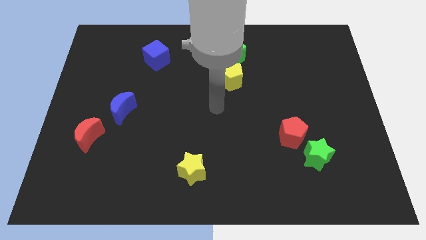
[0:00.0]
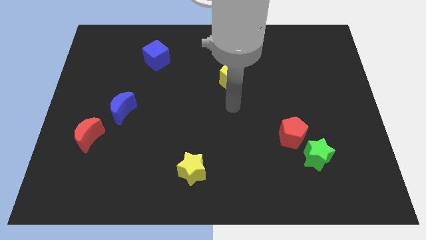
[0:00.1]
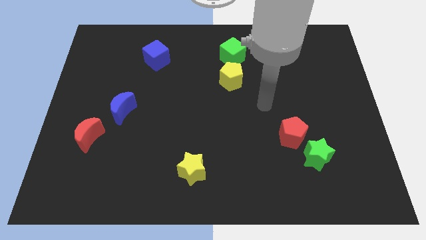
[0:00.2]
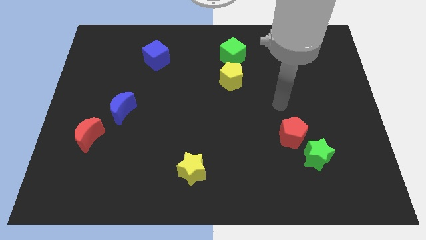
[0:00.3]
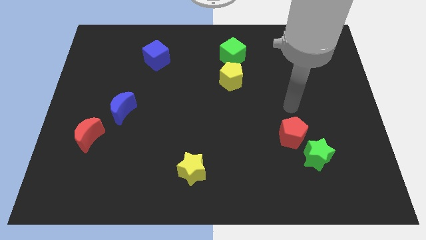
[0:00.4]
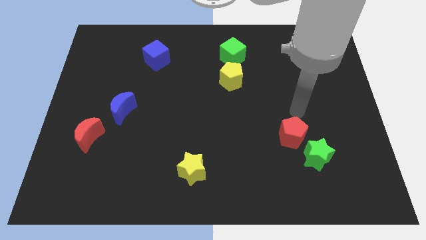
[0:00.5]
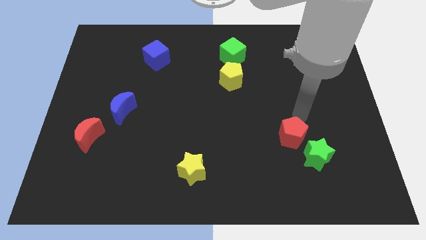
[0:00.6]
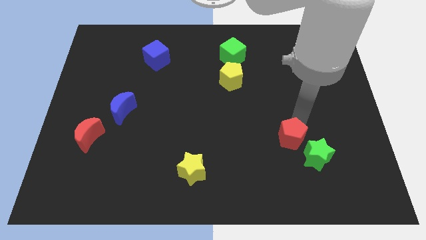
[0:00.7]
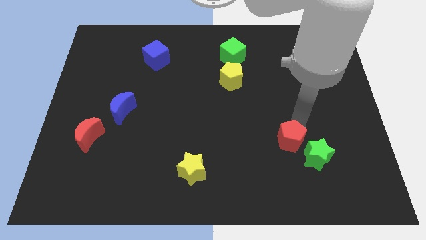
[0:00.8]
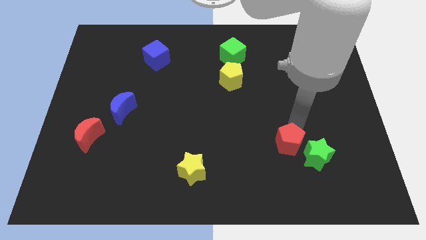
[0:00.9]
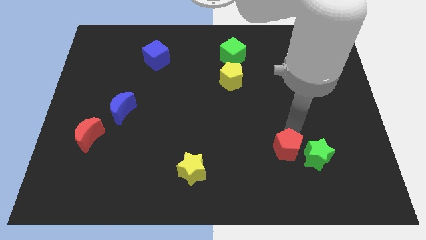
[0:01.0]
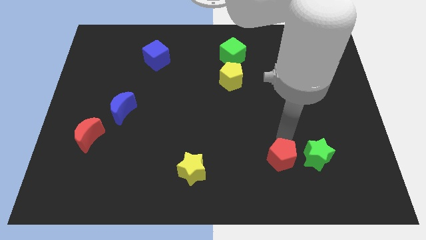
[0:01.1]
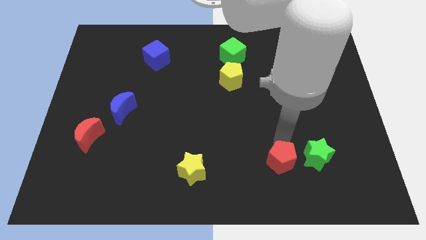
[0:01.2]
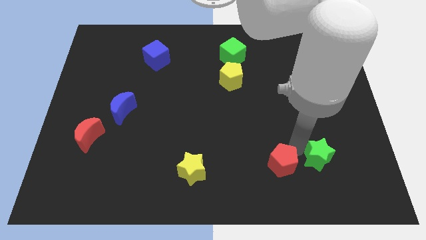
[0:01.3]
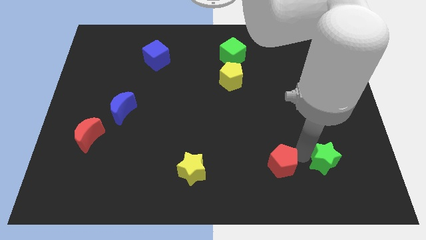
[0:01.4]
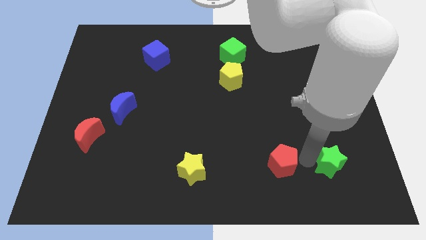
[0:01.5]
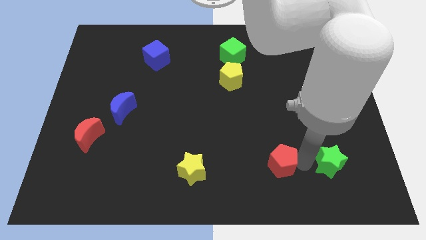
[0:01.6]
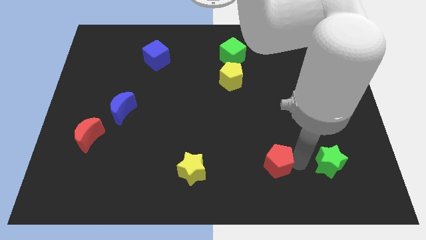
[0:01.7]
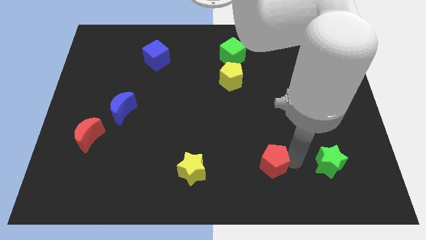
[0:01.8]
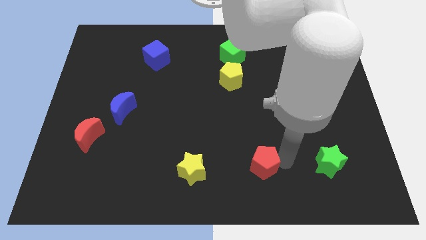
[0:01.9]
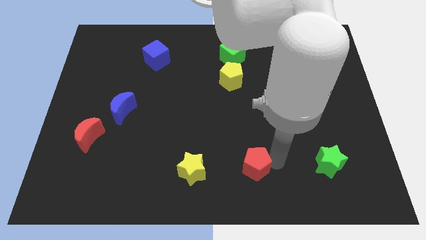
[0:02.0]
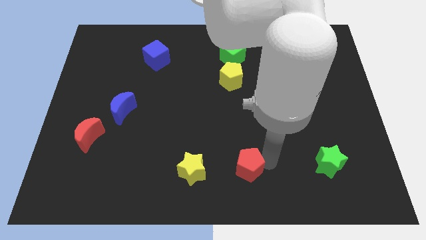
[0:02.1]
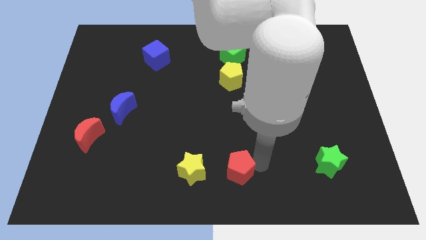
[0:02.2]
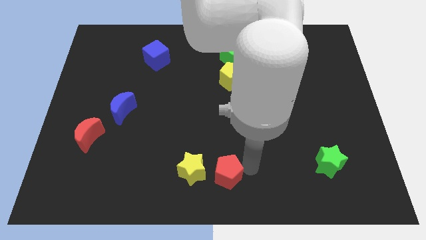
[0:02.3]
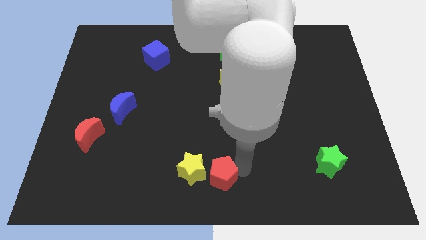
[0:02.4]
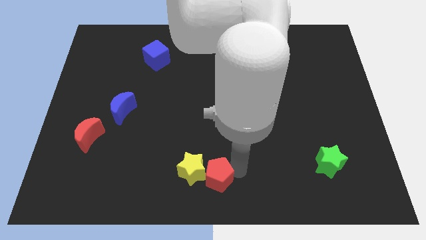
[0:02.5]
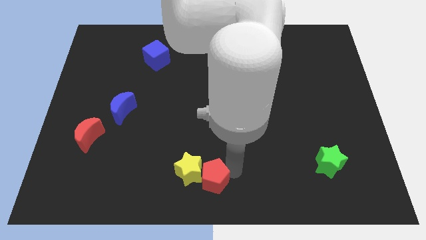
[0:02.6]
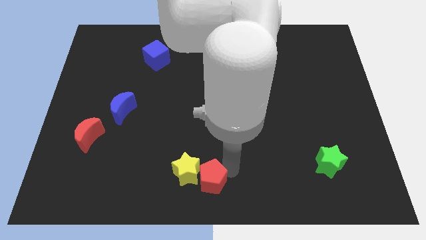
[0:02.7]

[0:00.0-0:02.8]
slide the red pentagon to the yellow star

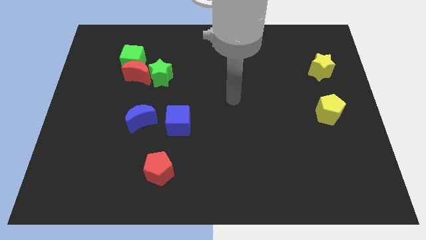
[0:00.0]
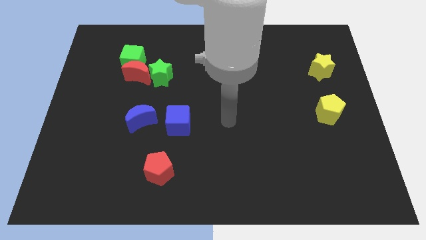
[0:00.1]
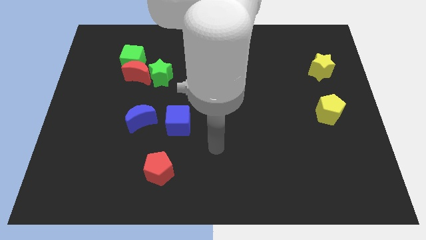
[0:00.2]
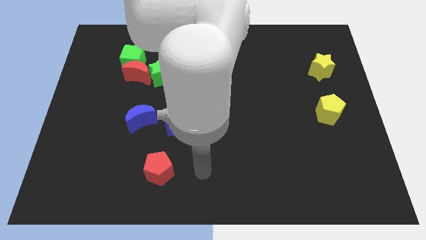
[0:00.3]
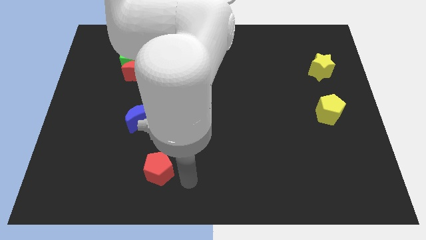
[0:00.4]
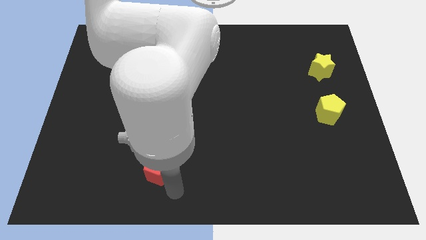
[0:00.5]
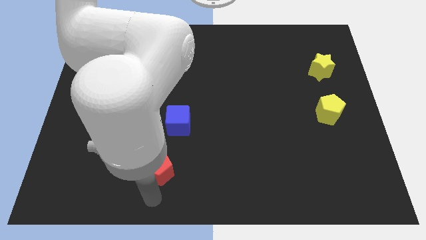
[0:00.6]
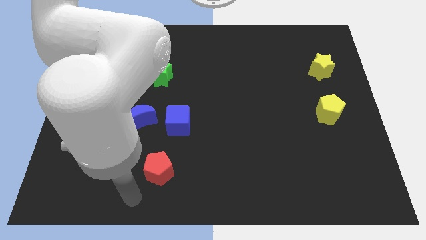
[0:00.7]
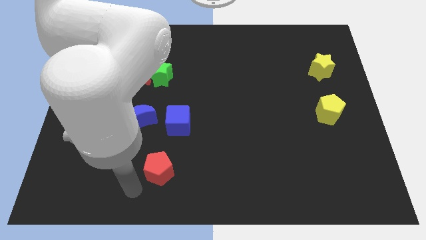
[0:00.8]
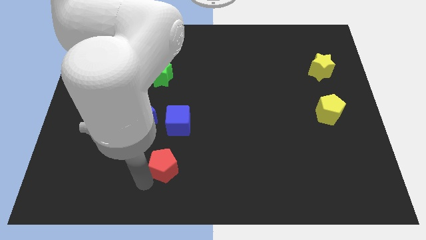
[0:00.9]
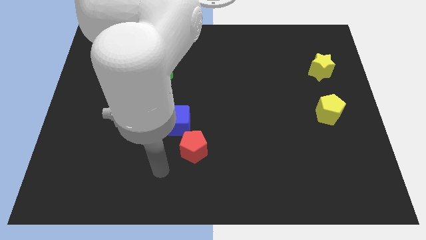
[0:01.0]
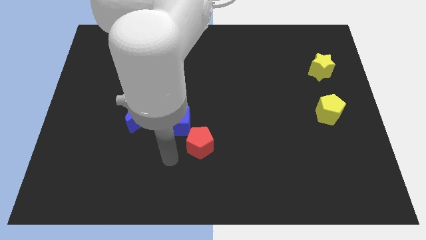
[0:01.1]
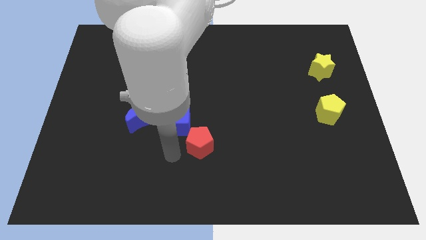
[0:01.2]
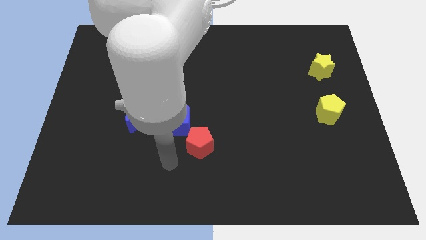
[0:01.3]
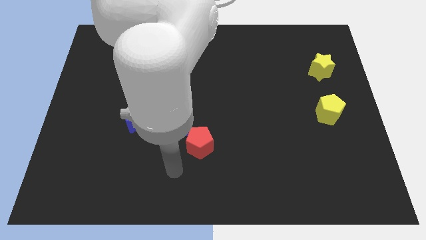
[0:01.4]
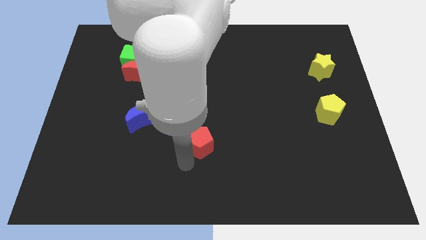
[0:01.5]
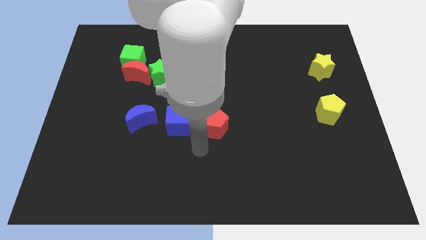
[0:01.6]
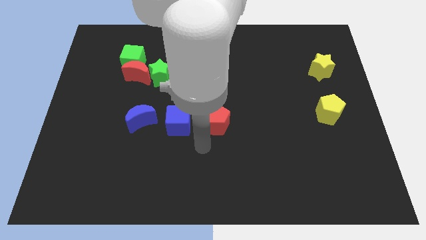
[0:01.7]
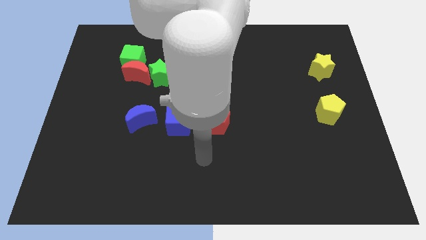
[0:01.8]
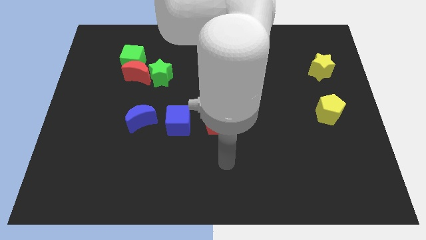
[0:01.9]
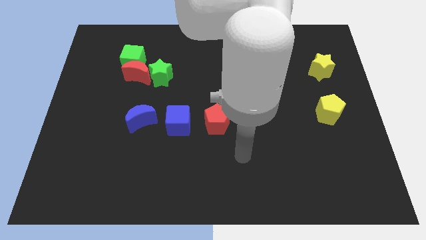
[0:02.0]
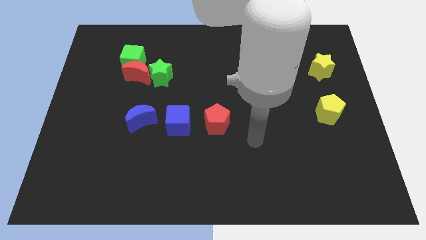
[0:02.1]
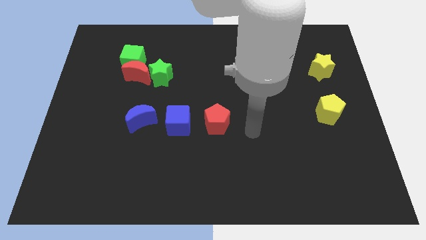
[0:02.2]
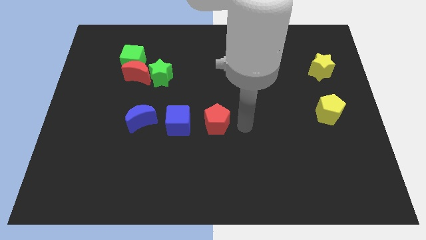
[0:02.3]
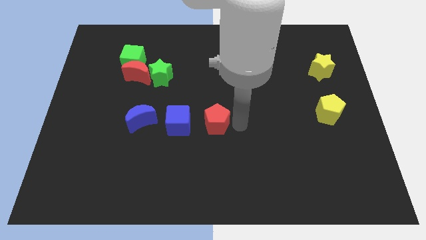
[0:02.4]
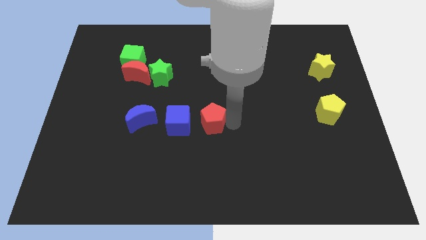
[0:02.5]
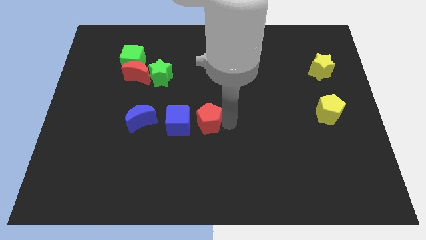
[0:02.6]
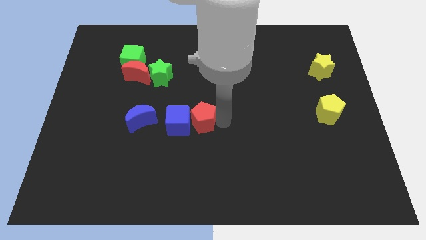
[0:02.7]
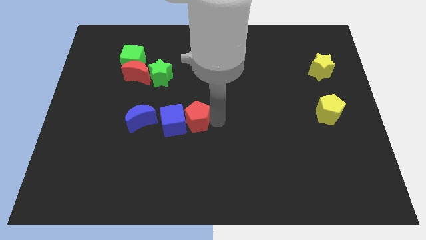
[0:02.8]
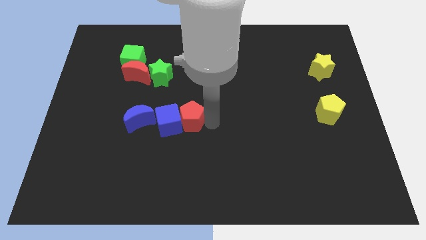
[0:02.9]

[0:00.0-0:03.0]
slide the red pentagon to the blue cube

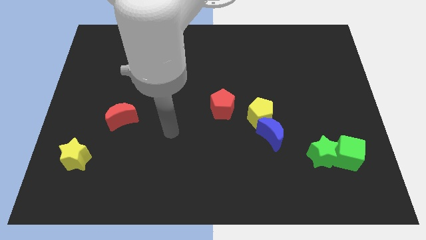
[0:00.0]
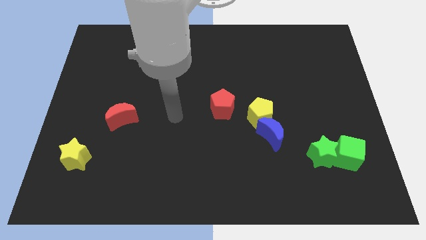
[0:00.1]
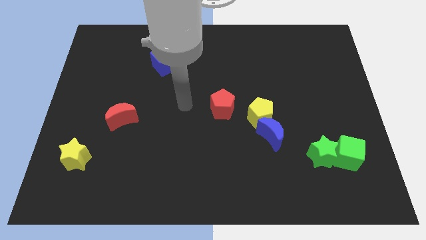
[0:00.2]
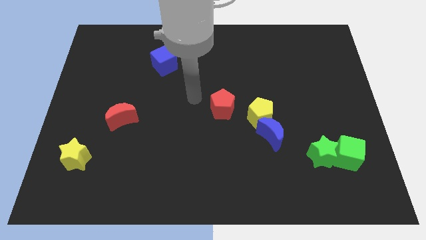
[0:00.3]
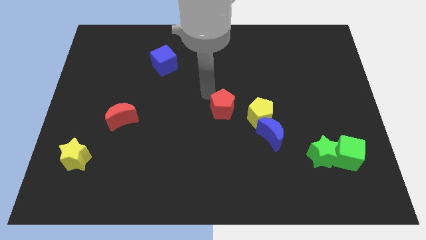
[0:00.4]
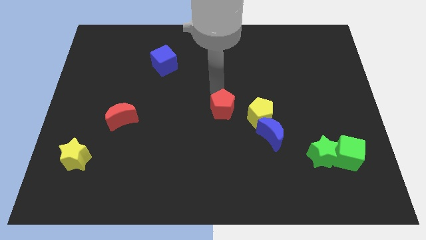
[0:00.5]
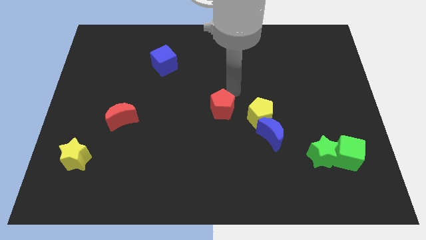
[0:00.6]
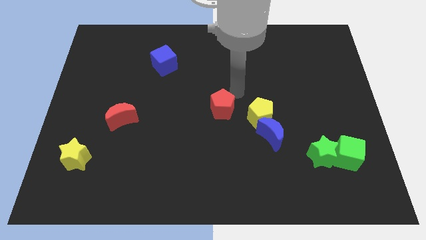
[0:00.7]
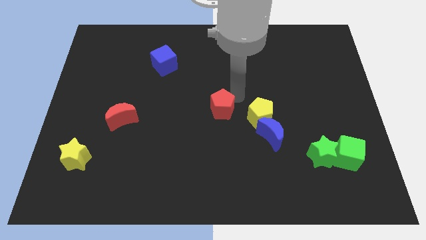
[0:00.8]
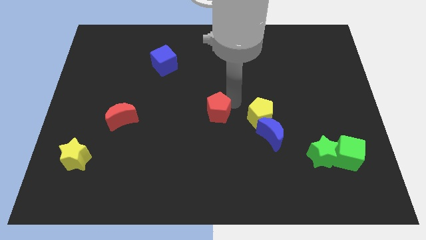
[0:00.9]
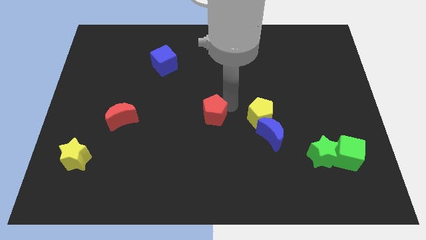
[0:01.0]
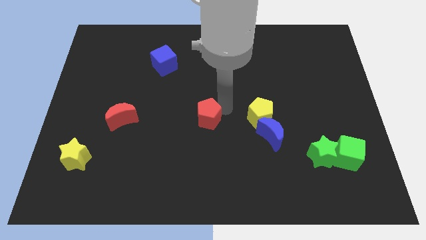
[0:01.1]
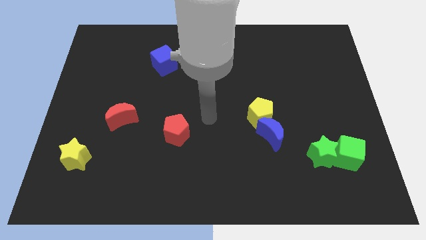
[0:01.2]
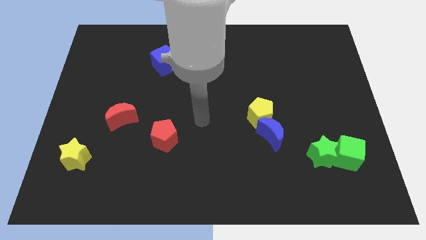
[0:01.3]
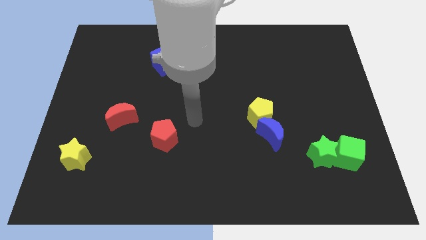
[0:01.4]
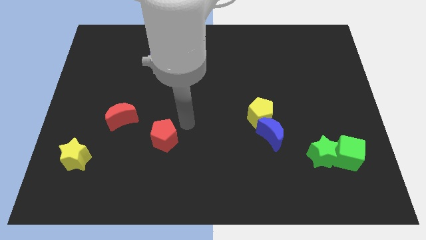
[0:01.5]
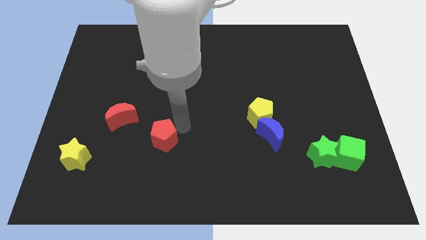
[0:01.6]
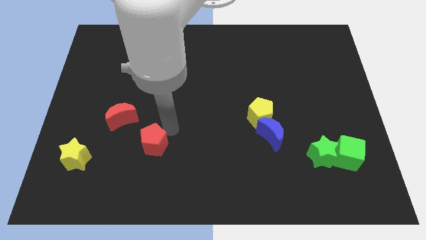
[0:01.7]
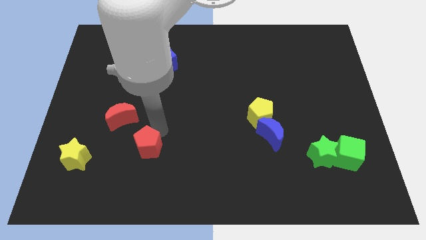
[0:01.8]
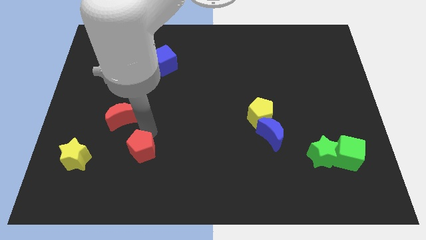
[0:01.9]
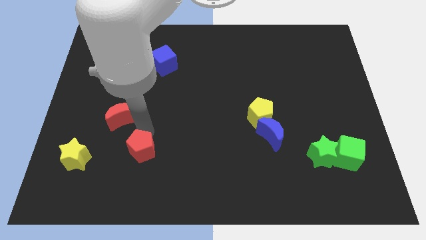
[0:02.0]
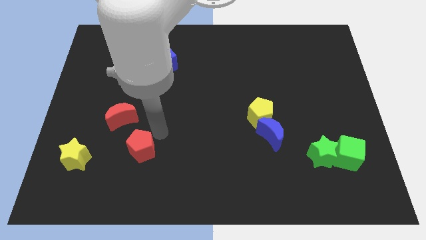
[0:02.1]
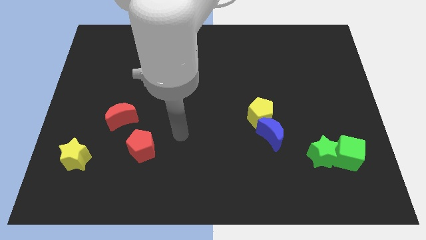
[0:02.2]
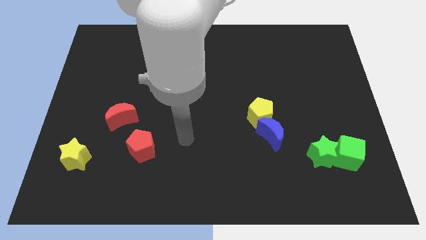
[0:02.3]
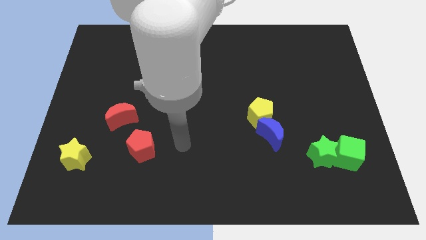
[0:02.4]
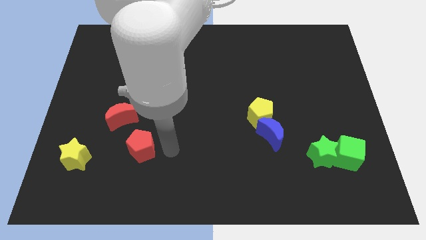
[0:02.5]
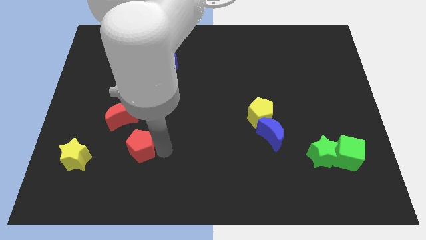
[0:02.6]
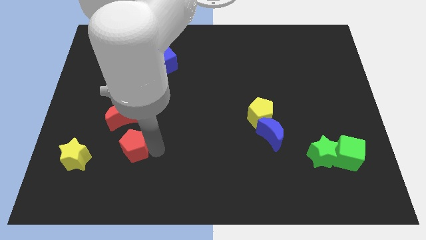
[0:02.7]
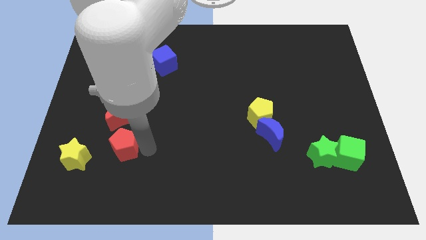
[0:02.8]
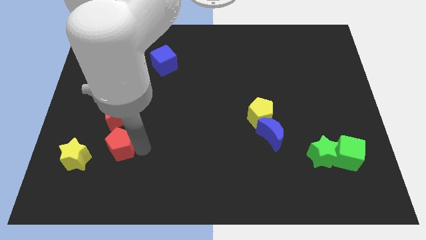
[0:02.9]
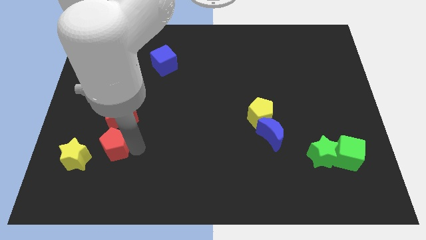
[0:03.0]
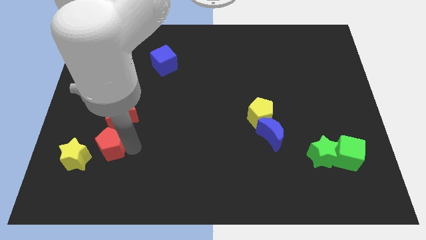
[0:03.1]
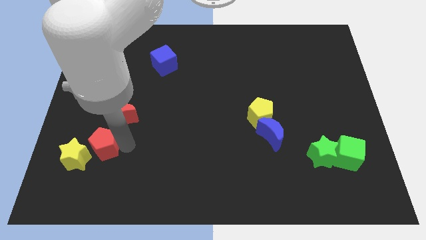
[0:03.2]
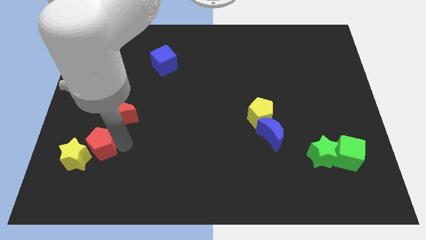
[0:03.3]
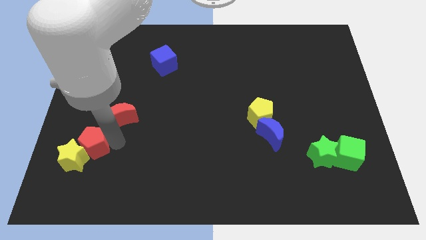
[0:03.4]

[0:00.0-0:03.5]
put the red pentagon to the yellow star
